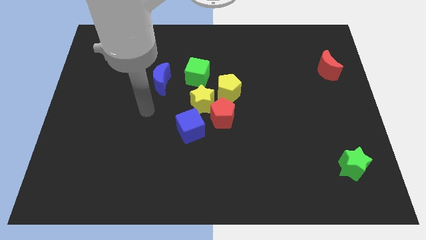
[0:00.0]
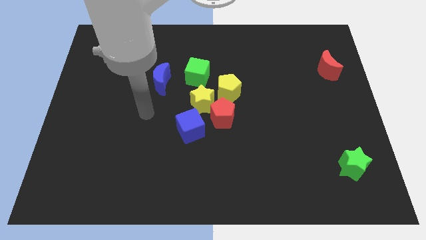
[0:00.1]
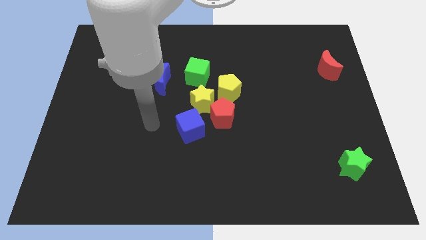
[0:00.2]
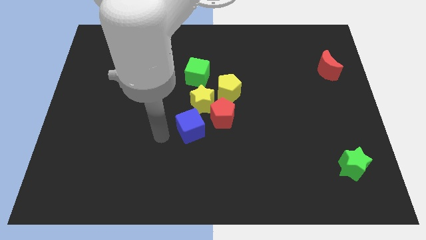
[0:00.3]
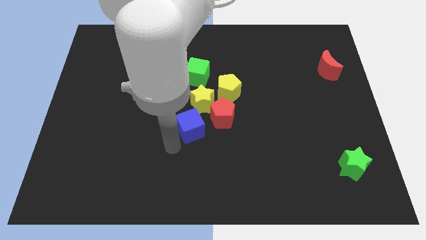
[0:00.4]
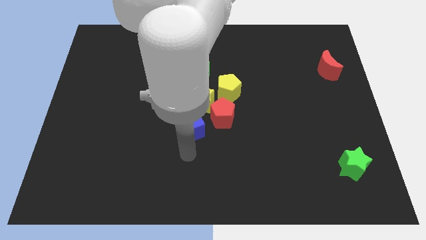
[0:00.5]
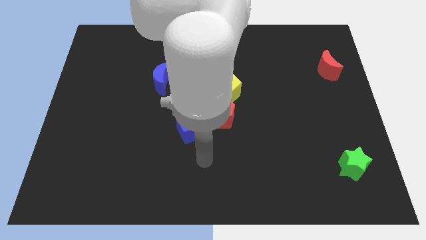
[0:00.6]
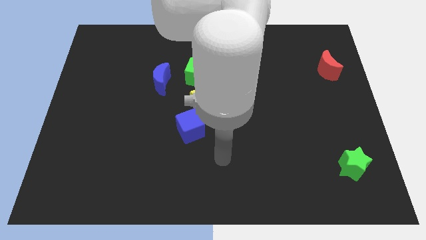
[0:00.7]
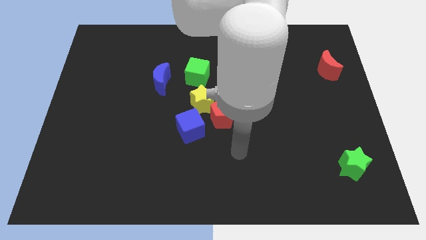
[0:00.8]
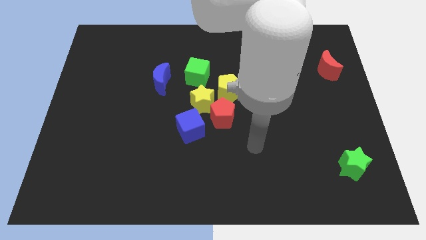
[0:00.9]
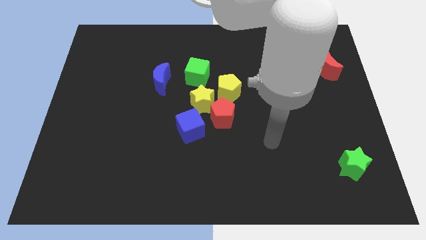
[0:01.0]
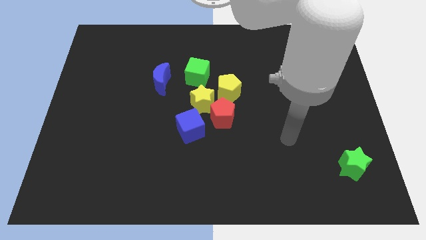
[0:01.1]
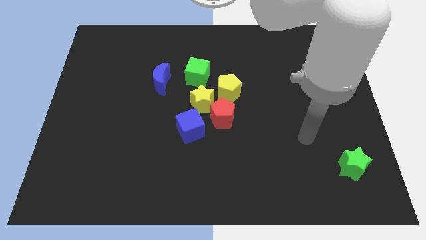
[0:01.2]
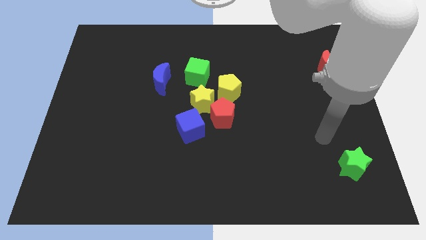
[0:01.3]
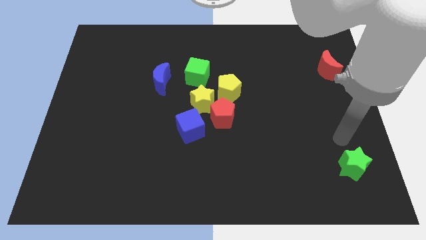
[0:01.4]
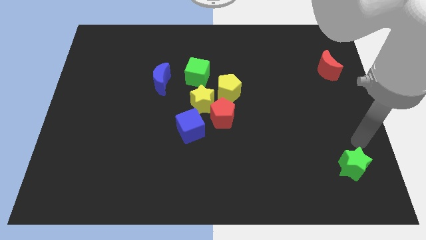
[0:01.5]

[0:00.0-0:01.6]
place your arm at the top of the green star

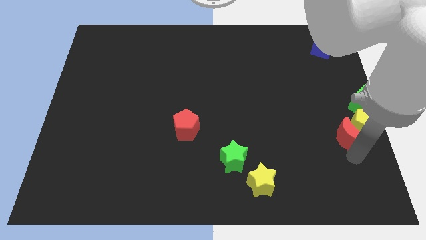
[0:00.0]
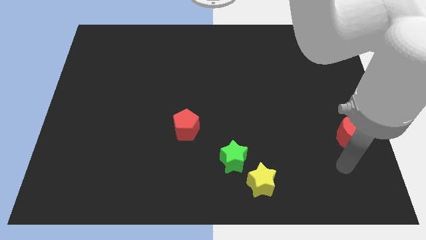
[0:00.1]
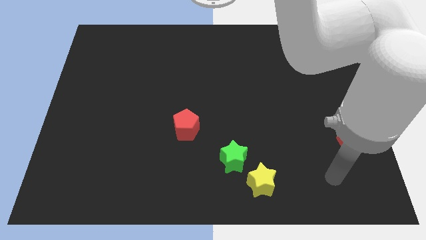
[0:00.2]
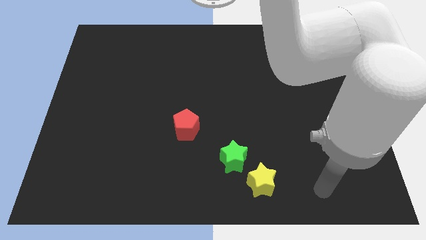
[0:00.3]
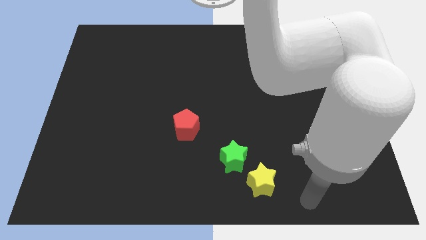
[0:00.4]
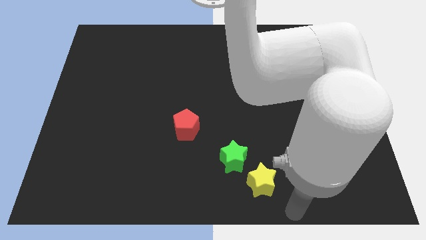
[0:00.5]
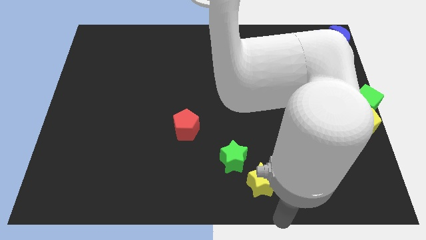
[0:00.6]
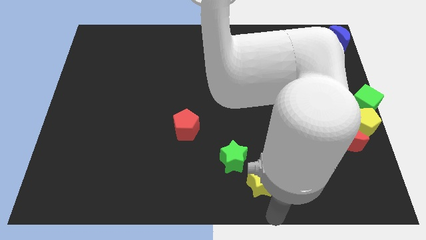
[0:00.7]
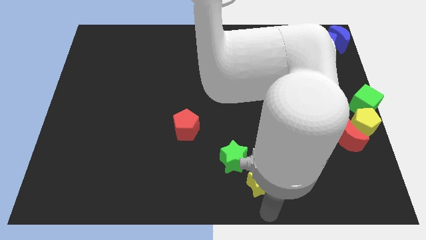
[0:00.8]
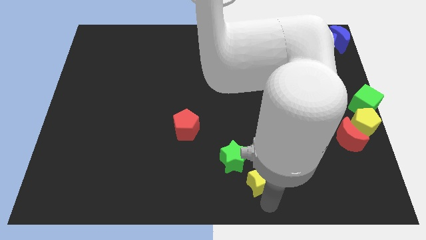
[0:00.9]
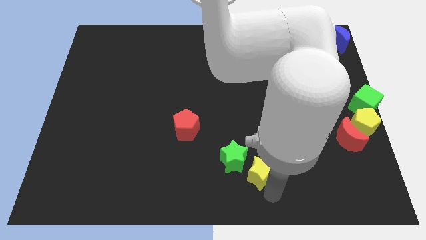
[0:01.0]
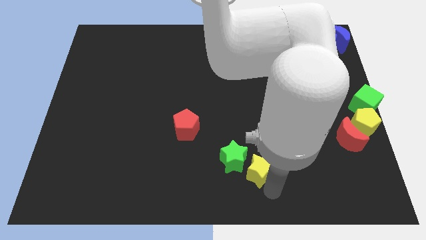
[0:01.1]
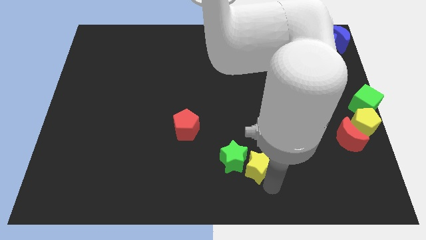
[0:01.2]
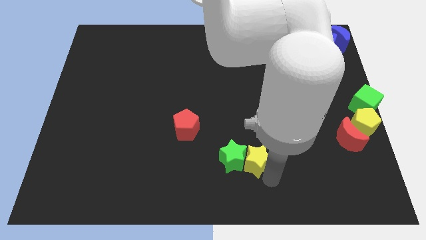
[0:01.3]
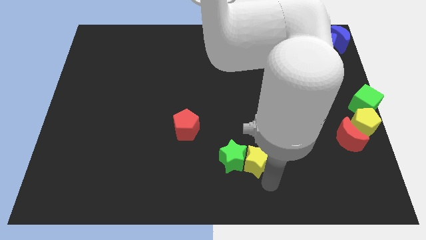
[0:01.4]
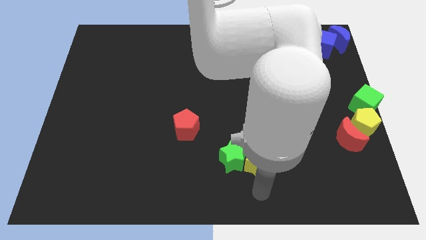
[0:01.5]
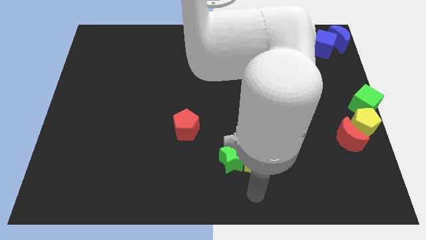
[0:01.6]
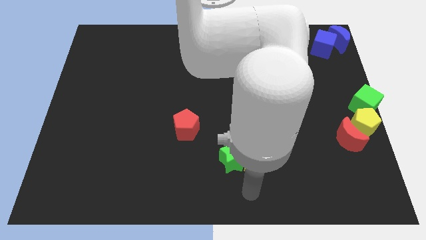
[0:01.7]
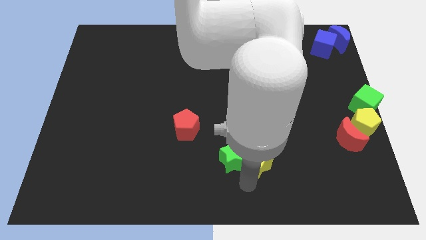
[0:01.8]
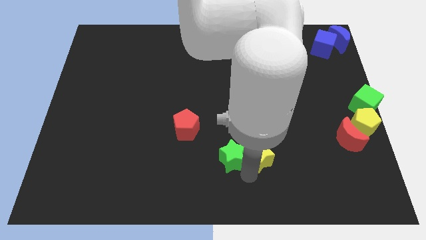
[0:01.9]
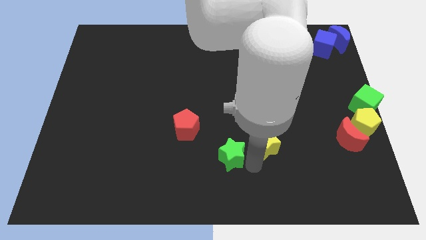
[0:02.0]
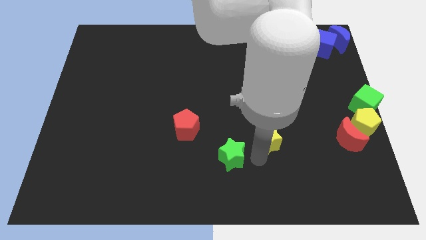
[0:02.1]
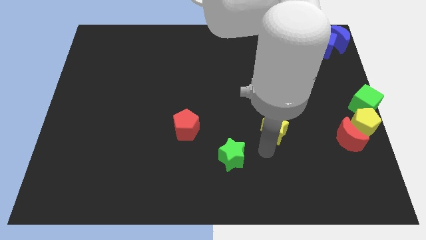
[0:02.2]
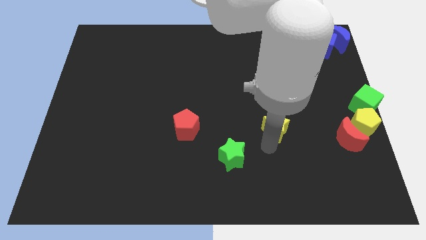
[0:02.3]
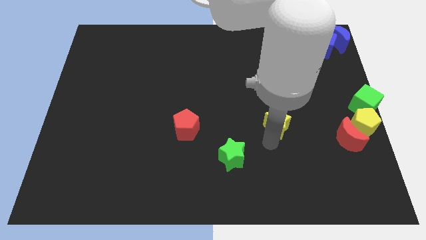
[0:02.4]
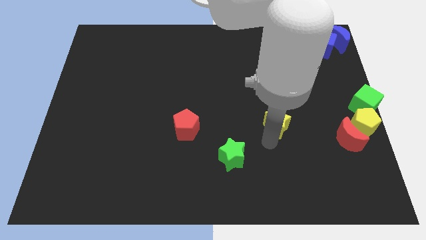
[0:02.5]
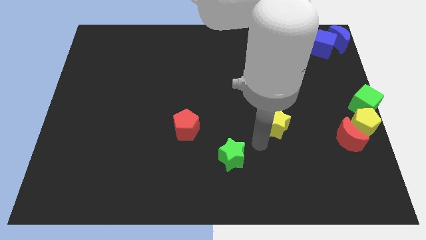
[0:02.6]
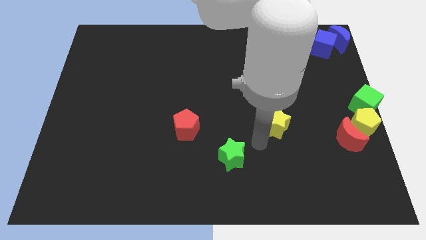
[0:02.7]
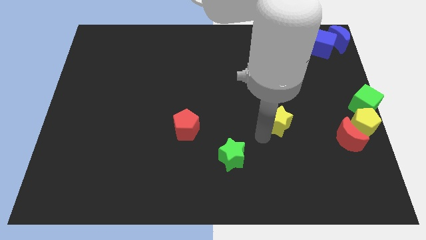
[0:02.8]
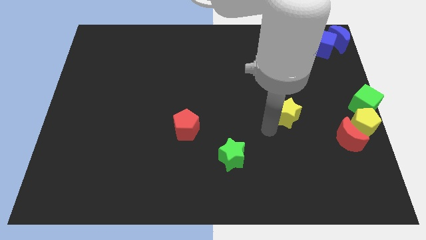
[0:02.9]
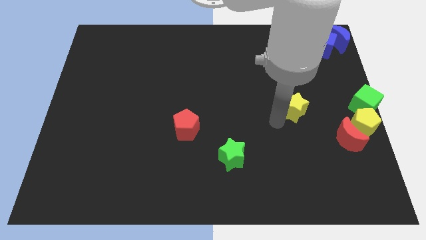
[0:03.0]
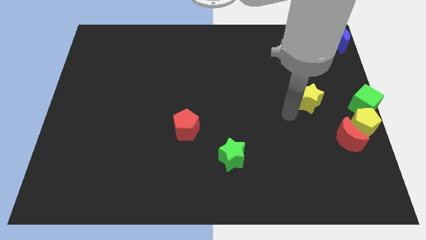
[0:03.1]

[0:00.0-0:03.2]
place the yellow star to the left side of the green cube

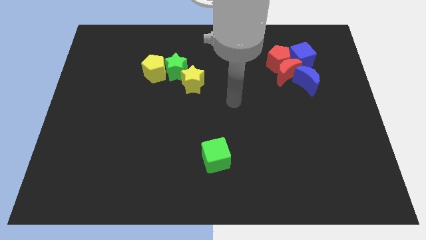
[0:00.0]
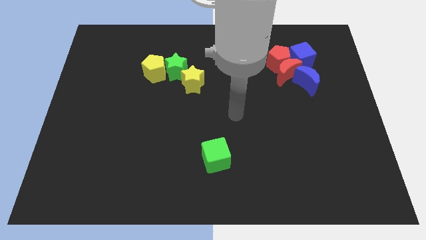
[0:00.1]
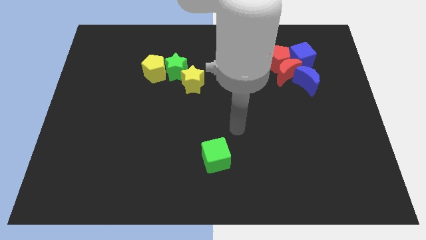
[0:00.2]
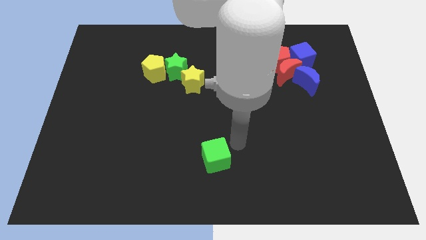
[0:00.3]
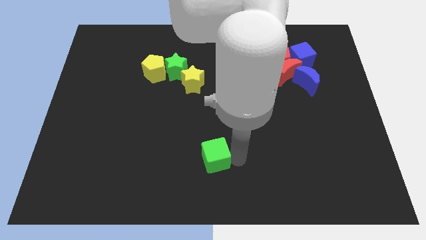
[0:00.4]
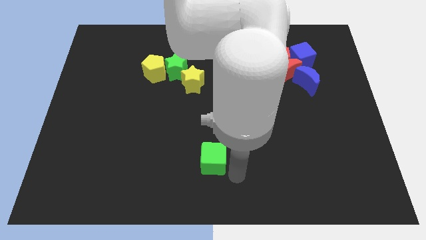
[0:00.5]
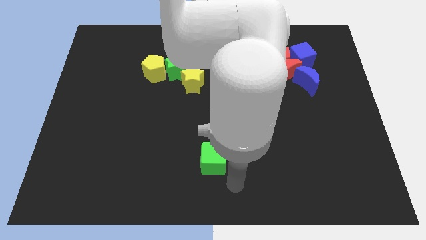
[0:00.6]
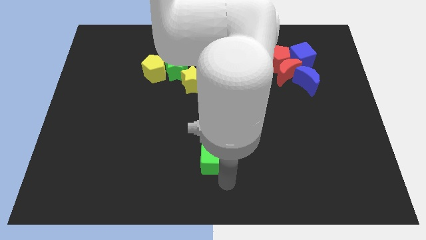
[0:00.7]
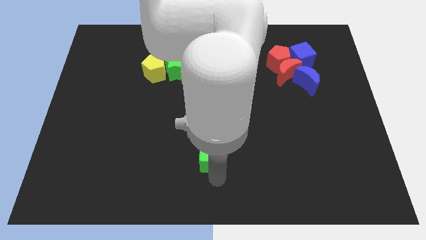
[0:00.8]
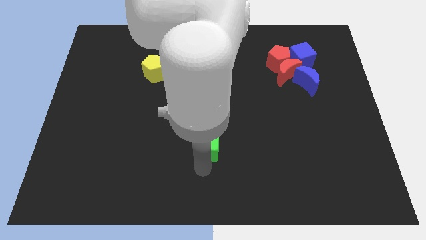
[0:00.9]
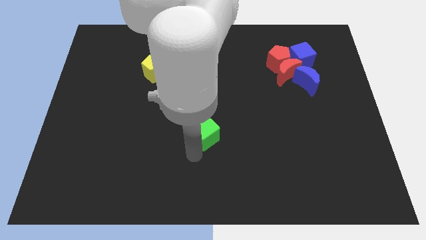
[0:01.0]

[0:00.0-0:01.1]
move your arm close to the green cube

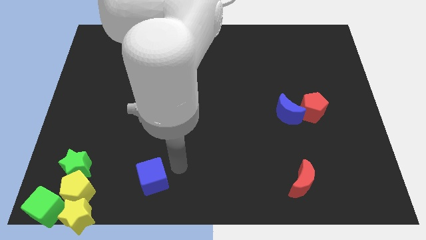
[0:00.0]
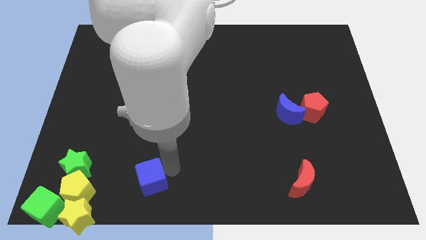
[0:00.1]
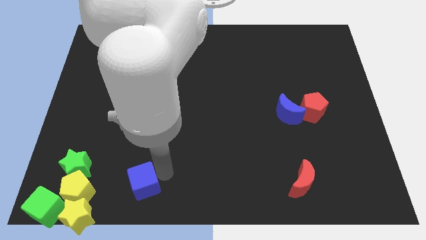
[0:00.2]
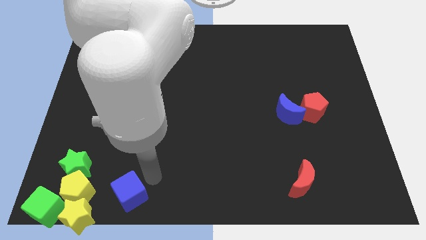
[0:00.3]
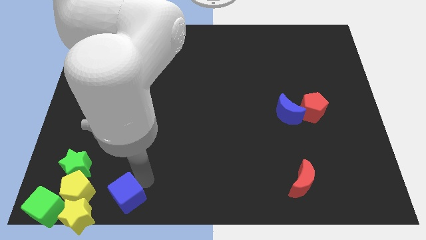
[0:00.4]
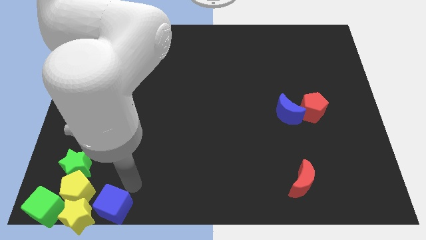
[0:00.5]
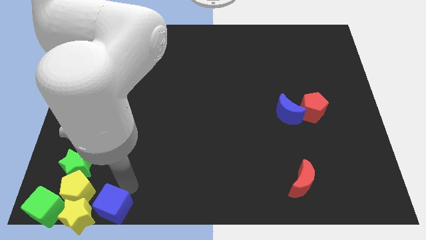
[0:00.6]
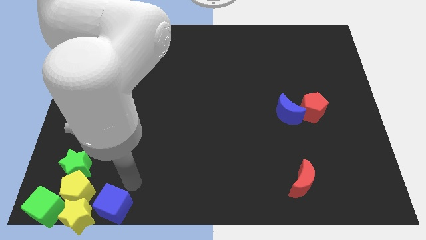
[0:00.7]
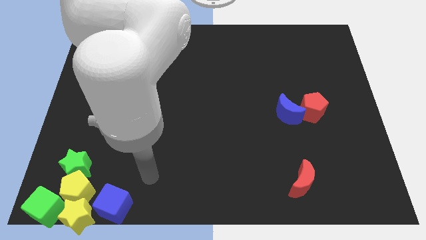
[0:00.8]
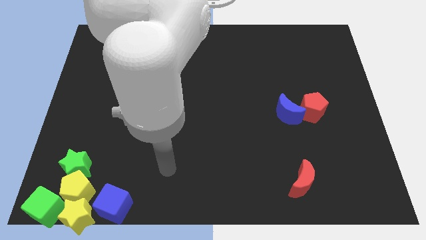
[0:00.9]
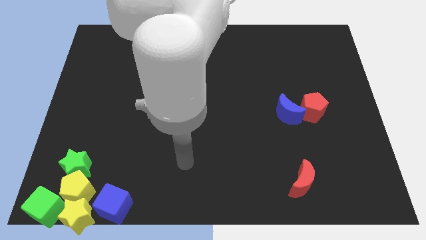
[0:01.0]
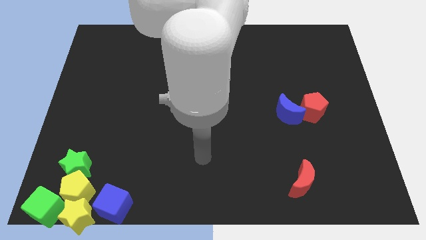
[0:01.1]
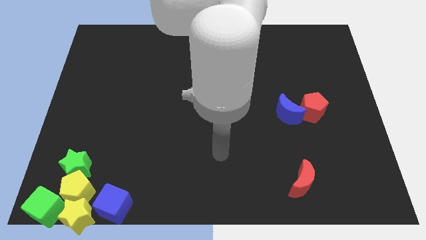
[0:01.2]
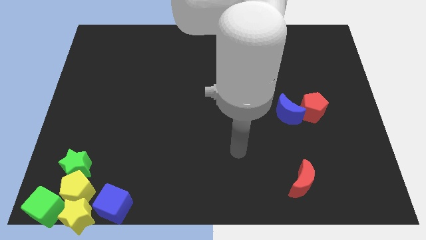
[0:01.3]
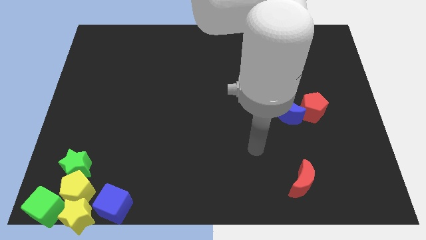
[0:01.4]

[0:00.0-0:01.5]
move the blue cube to the right of the yellow star

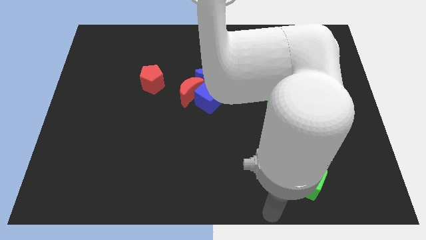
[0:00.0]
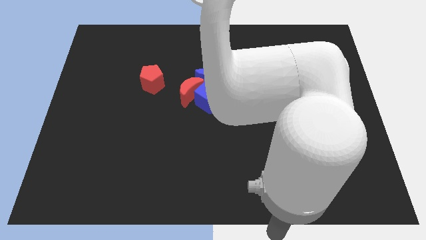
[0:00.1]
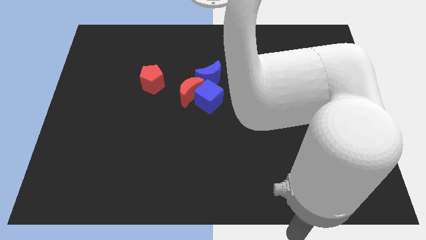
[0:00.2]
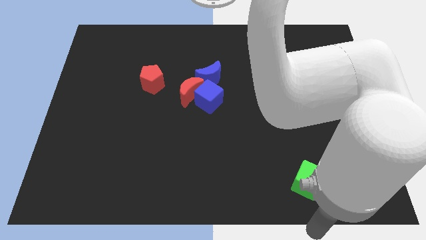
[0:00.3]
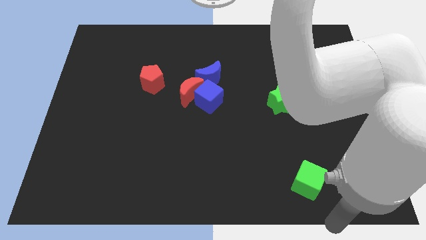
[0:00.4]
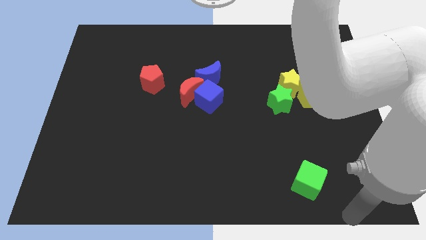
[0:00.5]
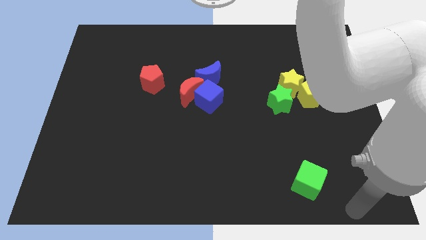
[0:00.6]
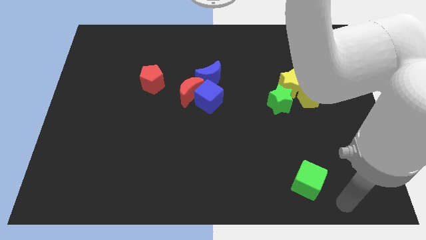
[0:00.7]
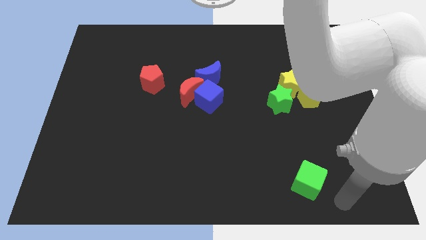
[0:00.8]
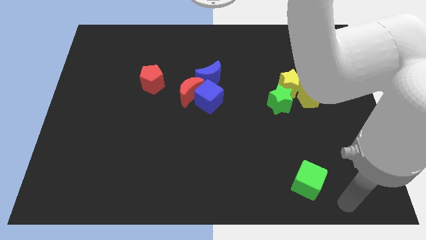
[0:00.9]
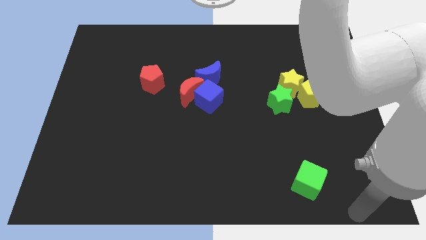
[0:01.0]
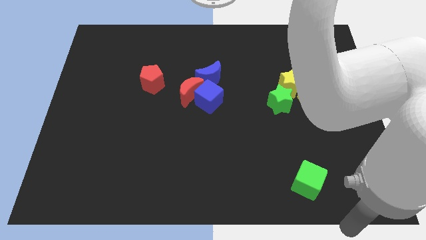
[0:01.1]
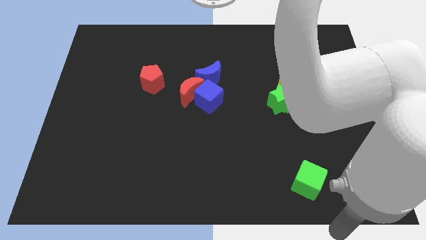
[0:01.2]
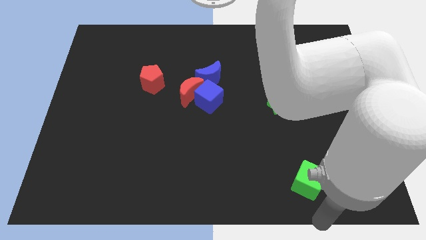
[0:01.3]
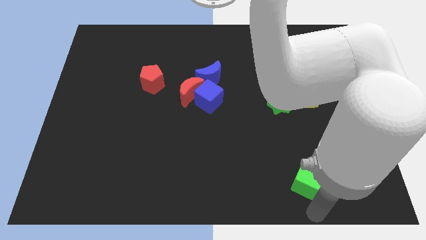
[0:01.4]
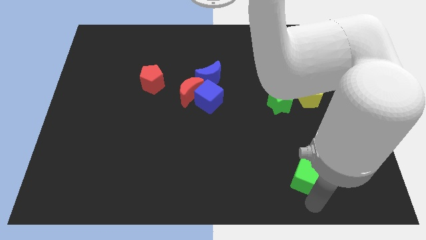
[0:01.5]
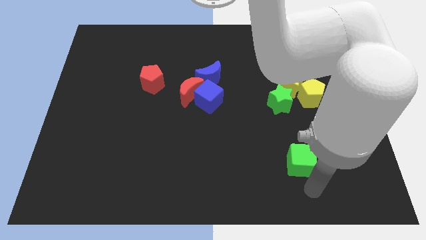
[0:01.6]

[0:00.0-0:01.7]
push the green cube towards the green star
